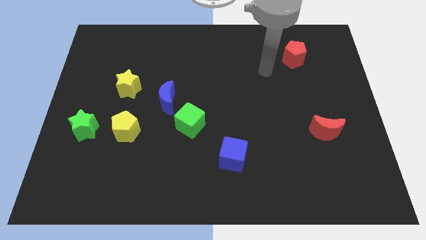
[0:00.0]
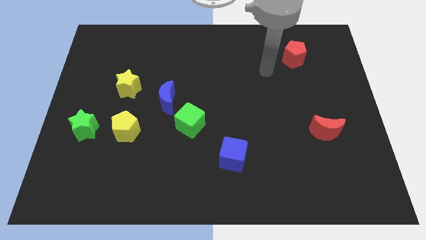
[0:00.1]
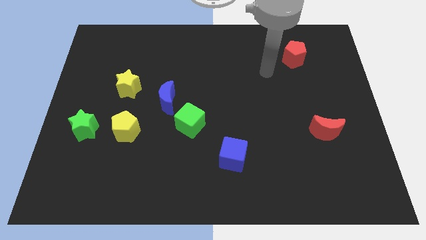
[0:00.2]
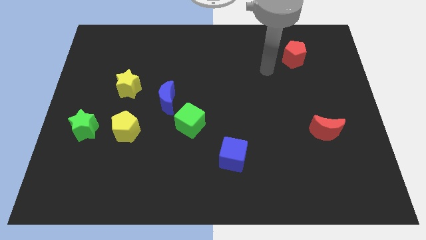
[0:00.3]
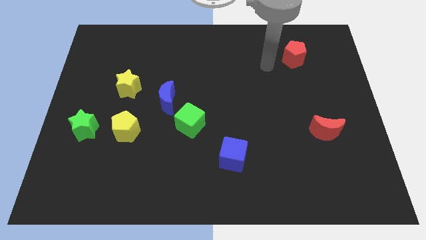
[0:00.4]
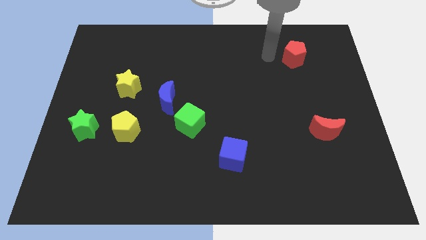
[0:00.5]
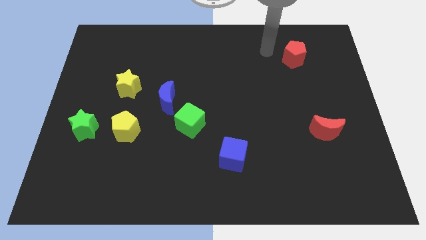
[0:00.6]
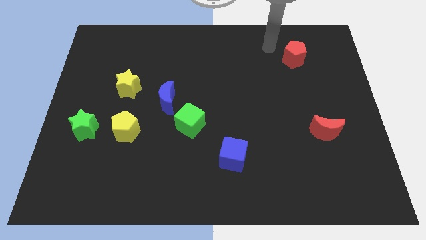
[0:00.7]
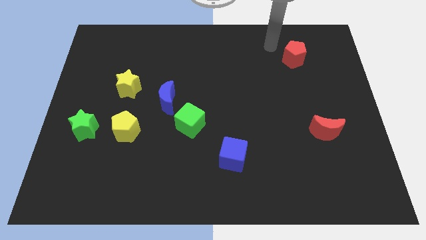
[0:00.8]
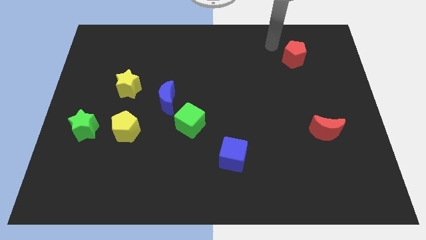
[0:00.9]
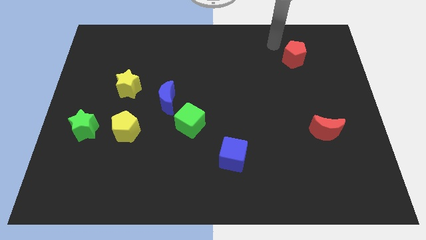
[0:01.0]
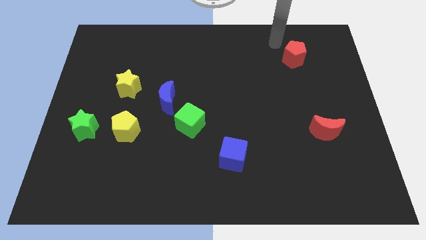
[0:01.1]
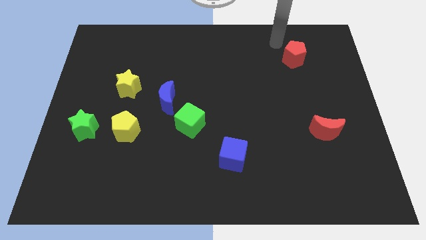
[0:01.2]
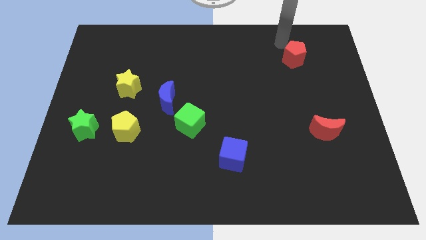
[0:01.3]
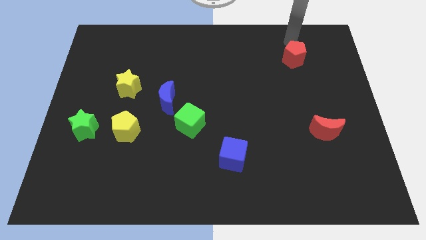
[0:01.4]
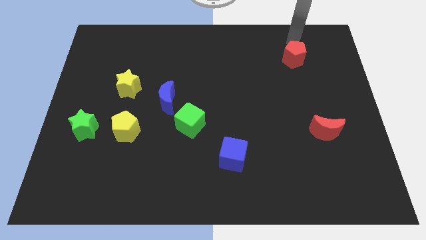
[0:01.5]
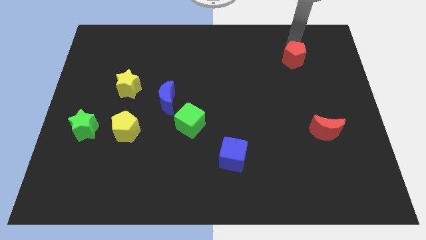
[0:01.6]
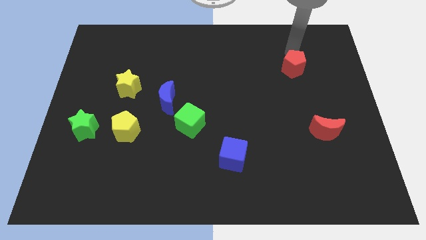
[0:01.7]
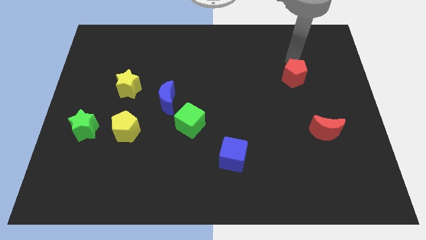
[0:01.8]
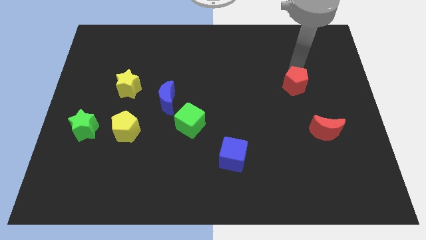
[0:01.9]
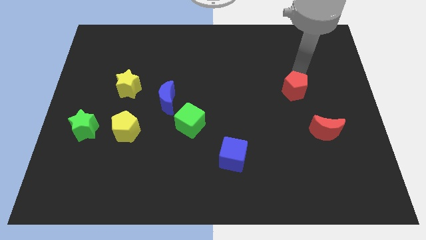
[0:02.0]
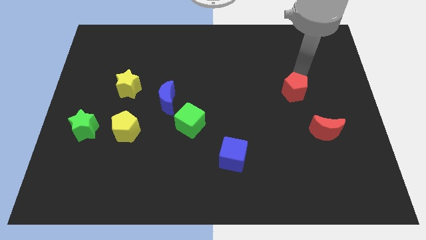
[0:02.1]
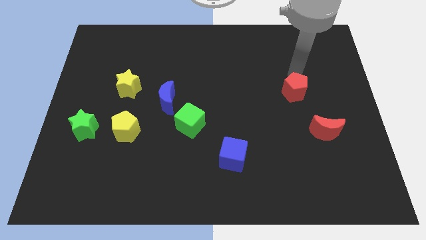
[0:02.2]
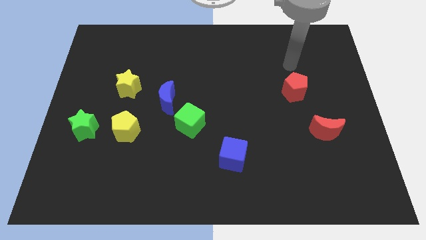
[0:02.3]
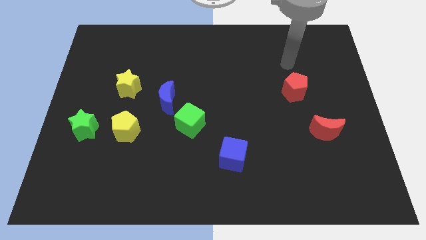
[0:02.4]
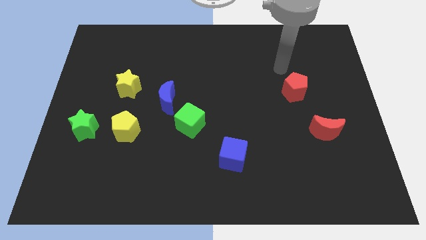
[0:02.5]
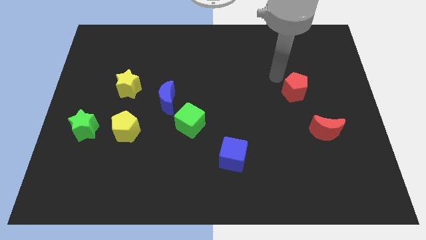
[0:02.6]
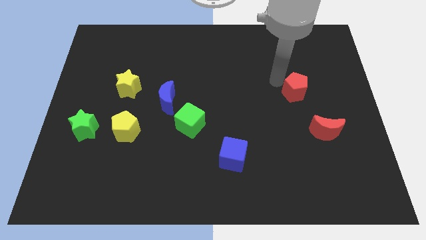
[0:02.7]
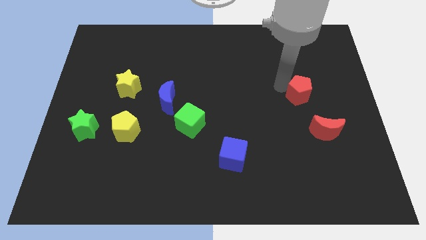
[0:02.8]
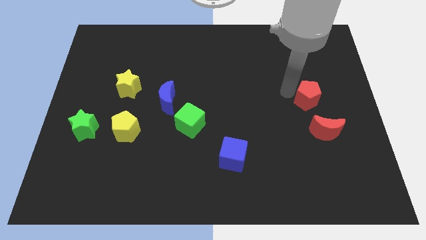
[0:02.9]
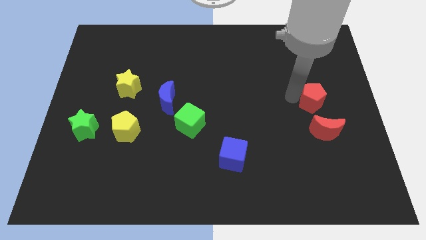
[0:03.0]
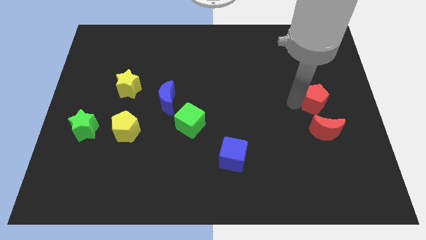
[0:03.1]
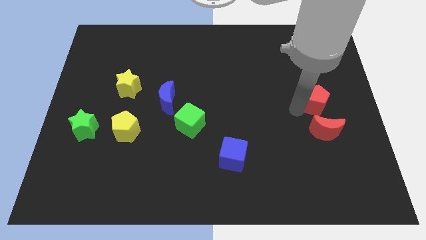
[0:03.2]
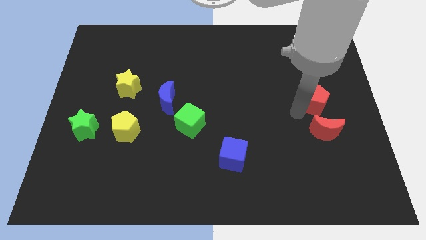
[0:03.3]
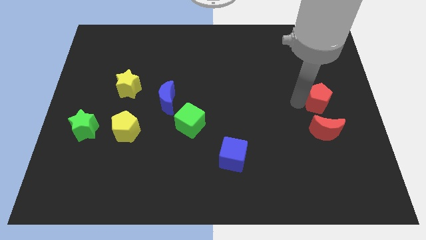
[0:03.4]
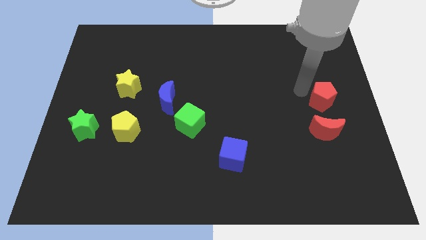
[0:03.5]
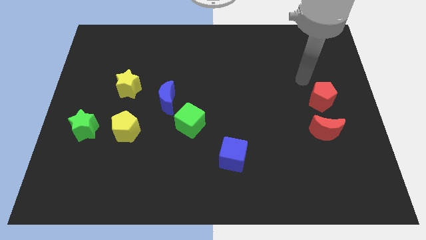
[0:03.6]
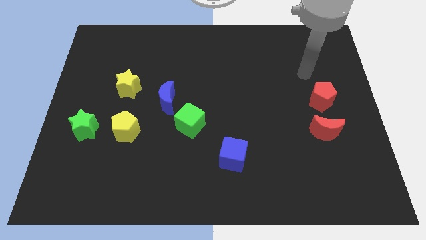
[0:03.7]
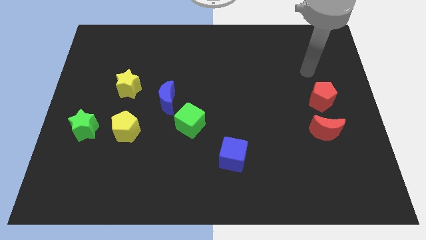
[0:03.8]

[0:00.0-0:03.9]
move the red pentagon closer to the

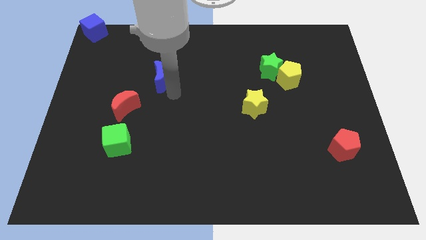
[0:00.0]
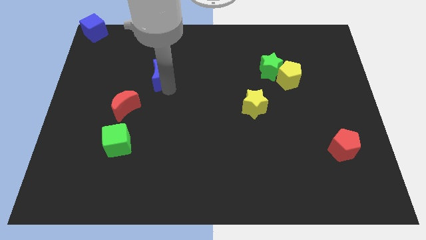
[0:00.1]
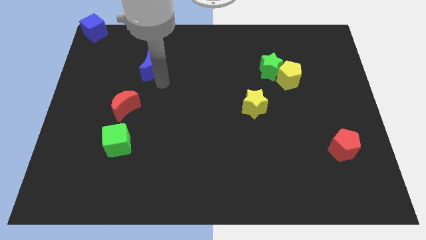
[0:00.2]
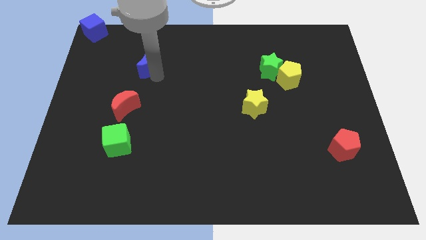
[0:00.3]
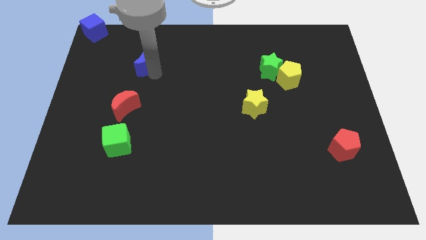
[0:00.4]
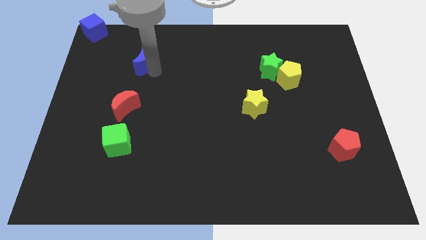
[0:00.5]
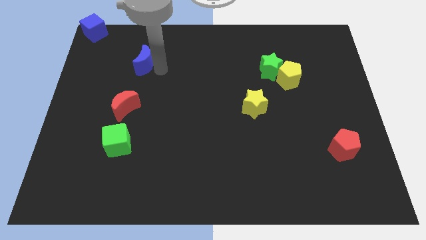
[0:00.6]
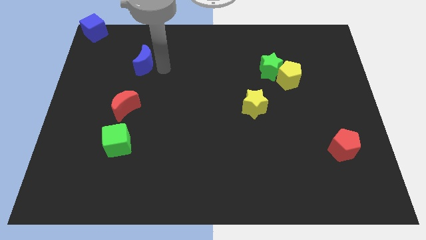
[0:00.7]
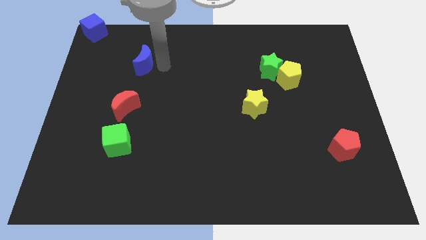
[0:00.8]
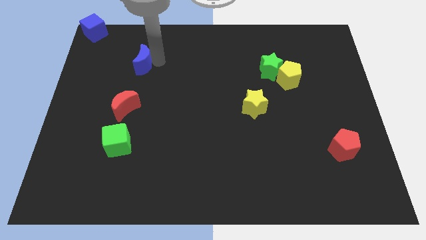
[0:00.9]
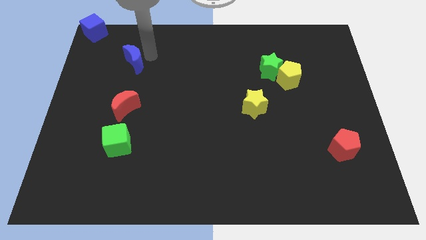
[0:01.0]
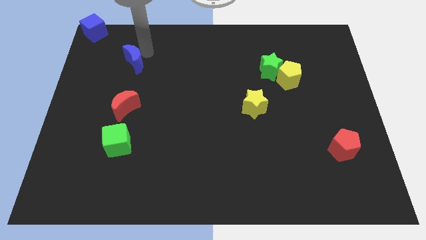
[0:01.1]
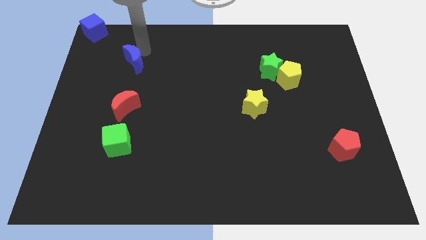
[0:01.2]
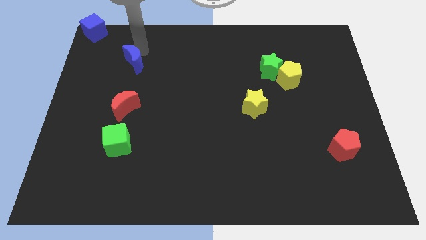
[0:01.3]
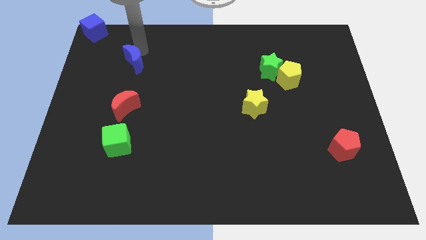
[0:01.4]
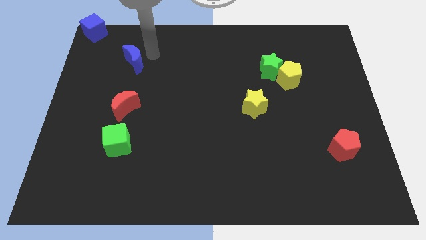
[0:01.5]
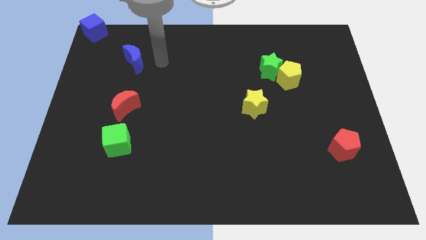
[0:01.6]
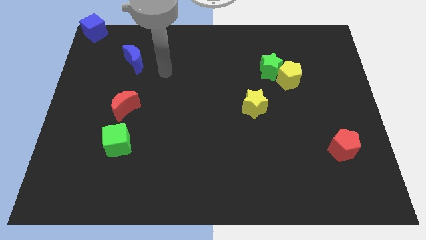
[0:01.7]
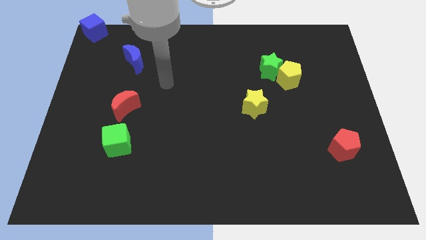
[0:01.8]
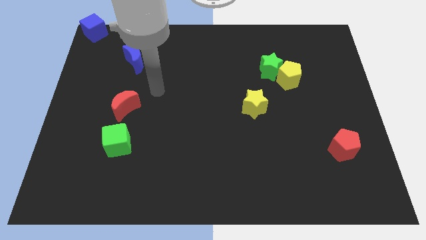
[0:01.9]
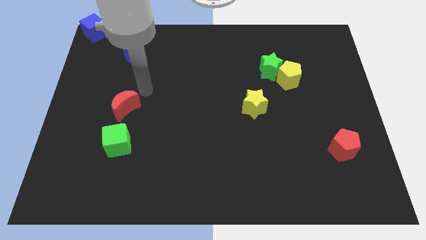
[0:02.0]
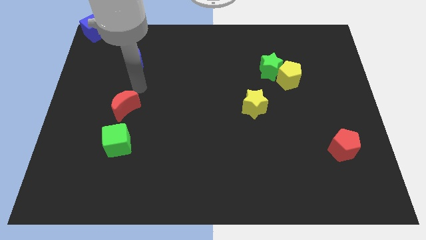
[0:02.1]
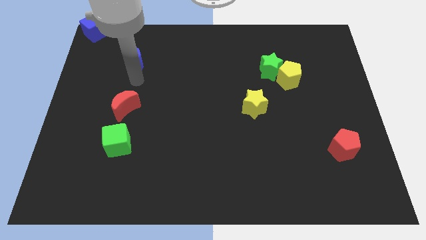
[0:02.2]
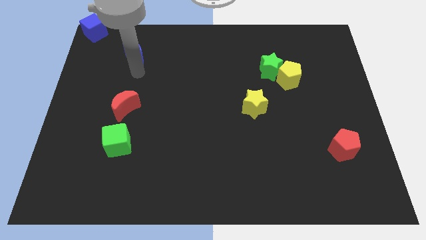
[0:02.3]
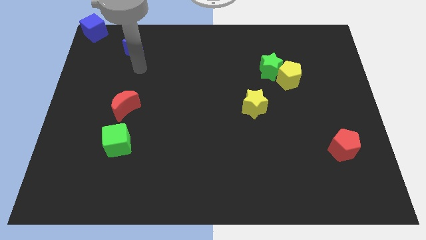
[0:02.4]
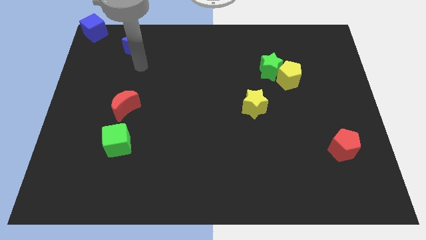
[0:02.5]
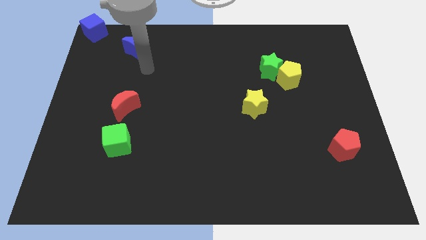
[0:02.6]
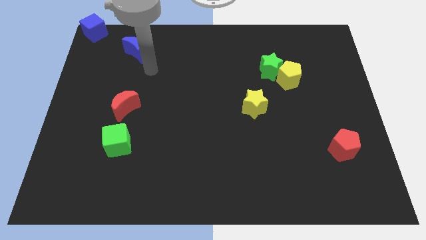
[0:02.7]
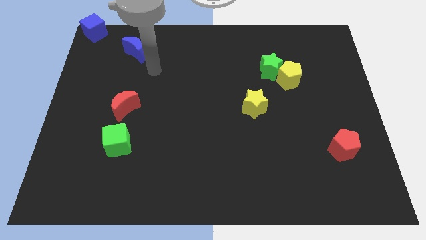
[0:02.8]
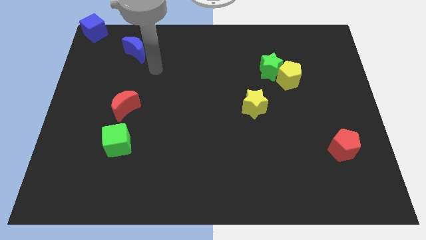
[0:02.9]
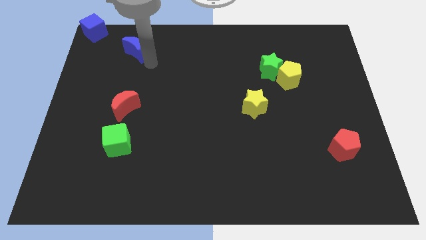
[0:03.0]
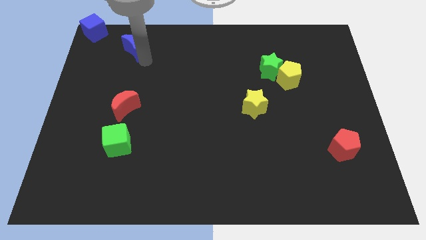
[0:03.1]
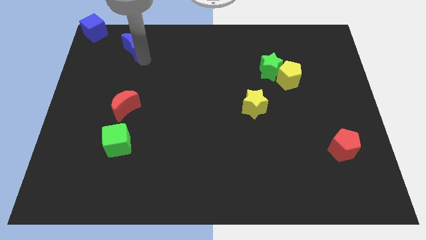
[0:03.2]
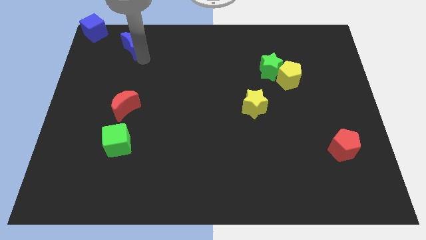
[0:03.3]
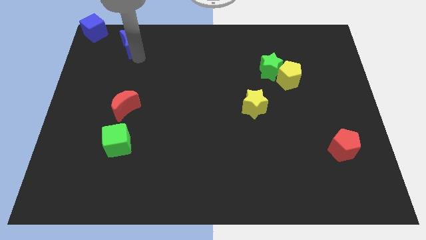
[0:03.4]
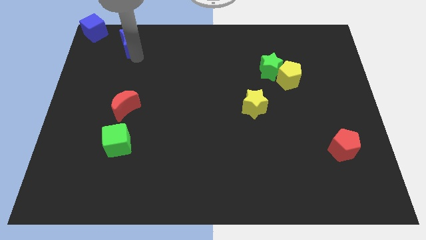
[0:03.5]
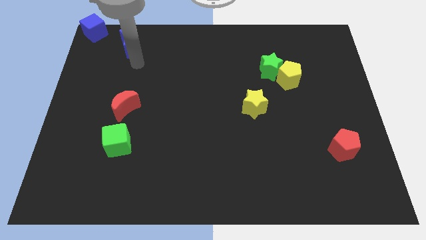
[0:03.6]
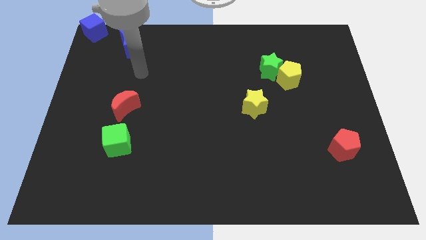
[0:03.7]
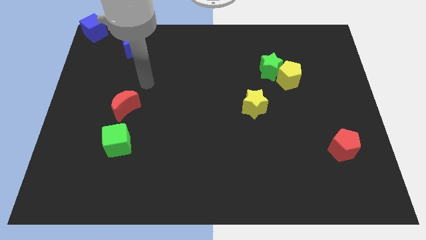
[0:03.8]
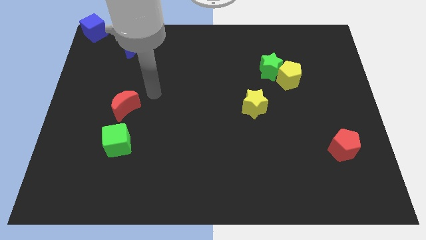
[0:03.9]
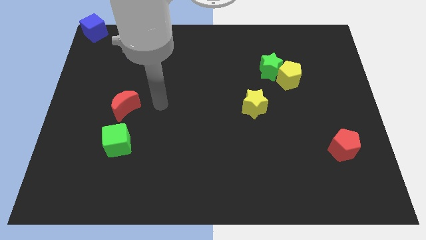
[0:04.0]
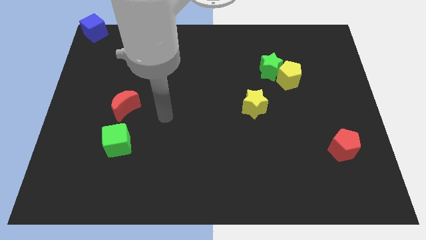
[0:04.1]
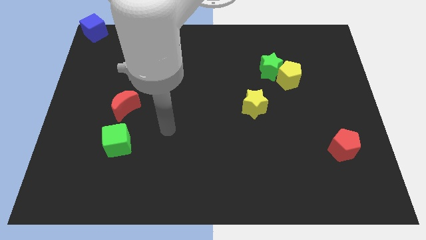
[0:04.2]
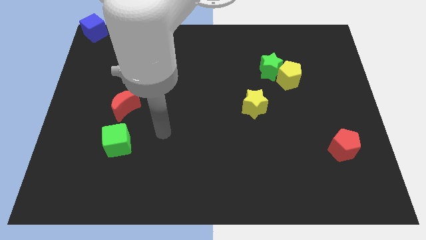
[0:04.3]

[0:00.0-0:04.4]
slide the blue moon towards the blue cube

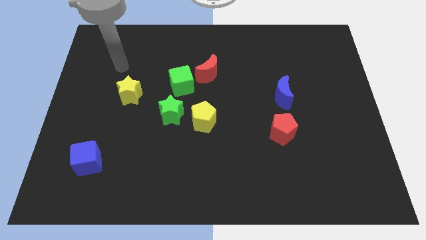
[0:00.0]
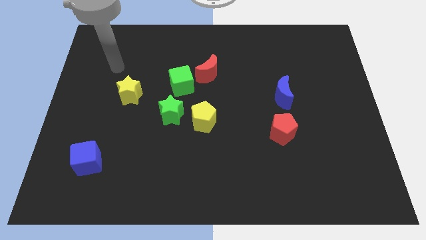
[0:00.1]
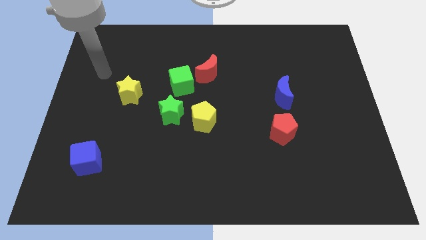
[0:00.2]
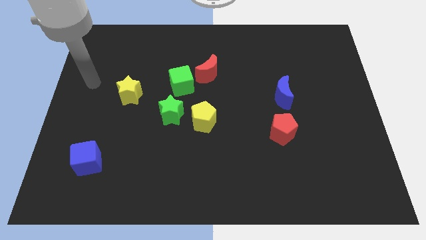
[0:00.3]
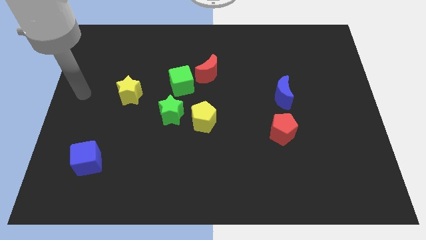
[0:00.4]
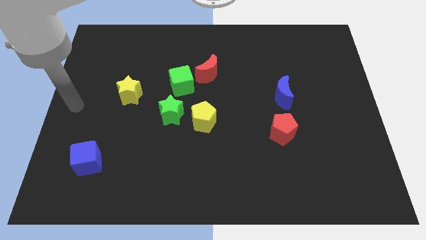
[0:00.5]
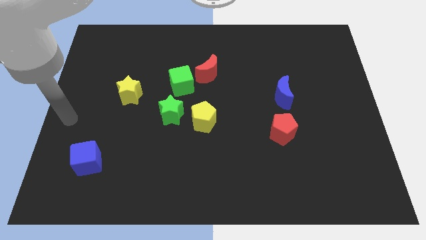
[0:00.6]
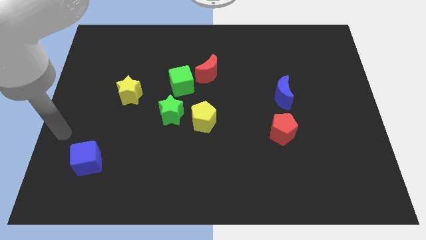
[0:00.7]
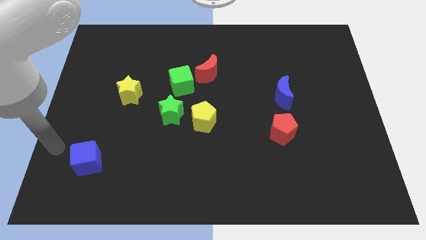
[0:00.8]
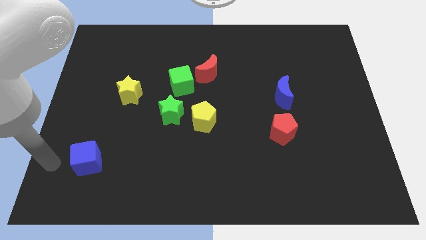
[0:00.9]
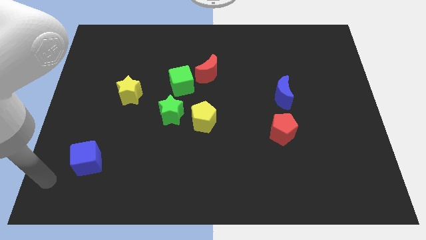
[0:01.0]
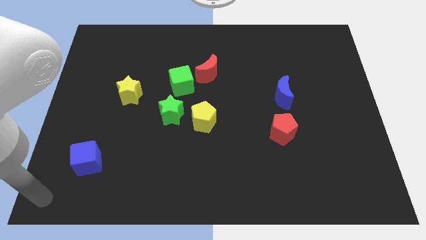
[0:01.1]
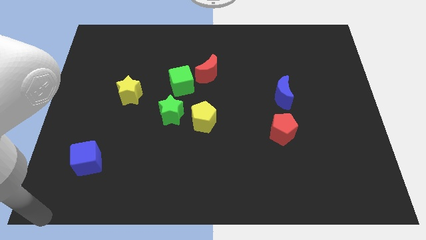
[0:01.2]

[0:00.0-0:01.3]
go and point your hand at the bottom left corner of the board
